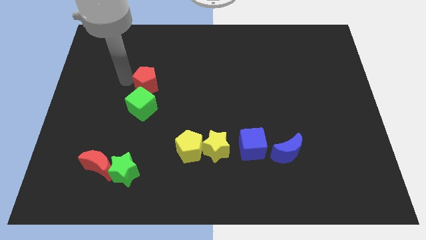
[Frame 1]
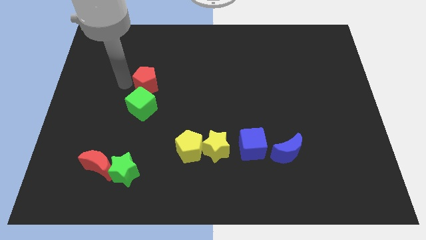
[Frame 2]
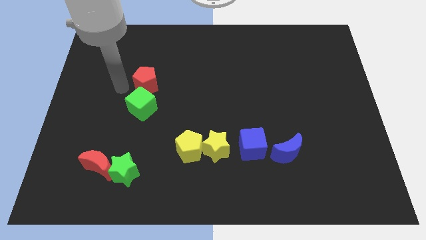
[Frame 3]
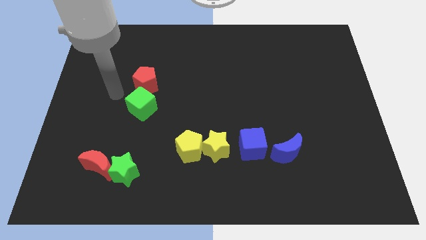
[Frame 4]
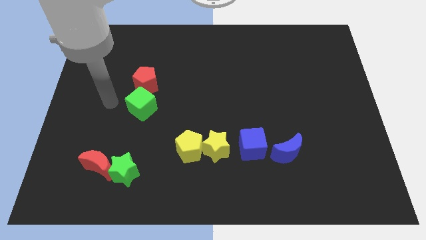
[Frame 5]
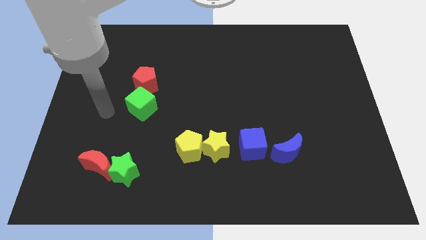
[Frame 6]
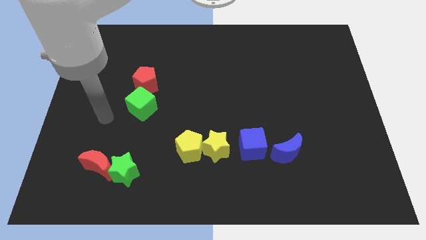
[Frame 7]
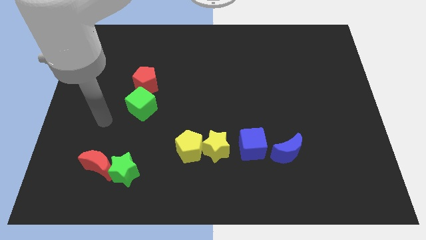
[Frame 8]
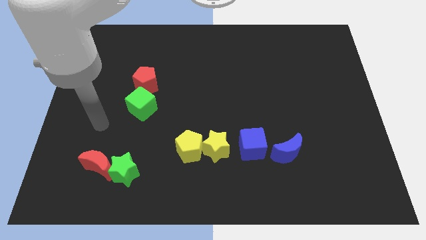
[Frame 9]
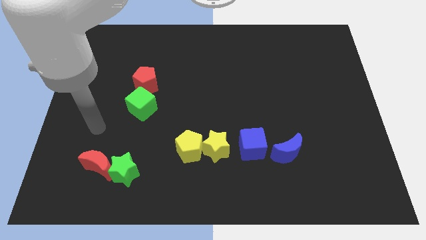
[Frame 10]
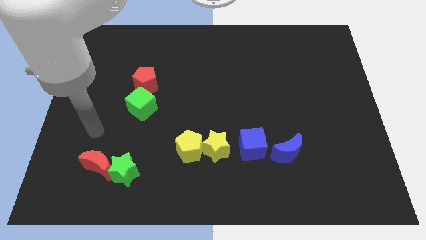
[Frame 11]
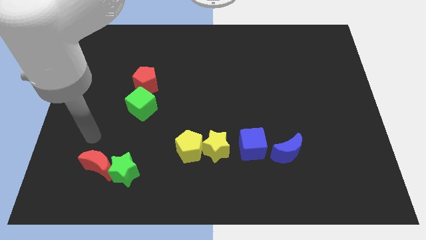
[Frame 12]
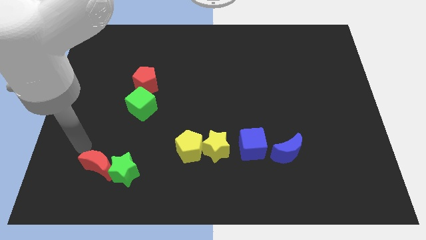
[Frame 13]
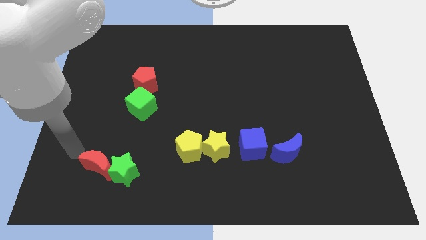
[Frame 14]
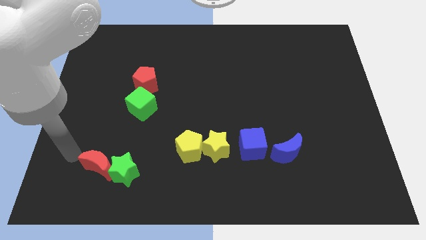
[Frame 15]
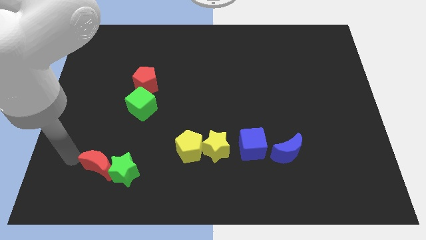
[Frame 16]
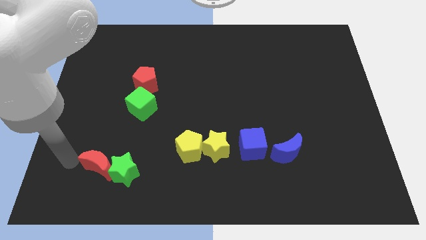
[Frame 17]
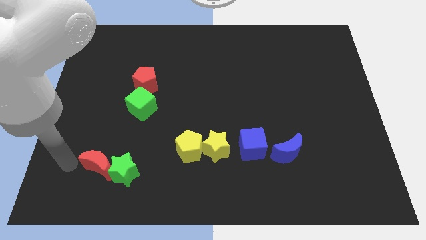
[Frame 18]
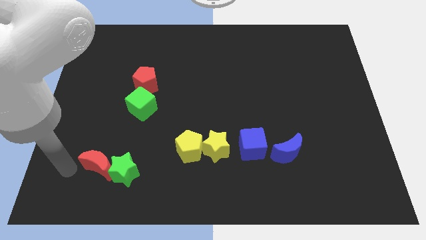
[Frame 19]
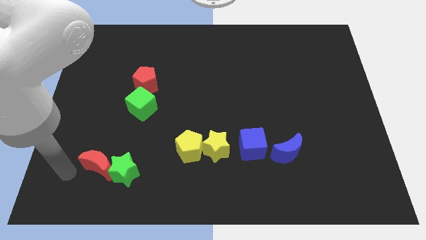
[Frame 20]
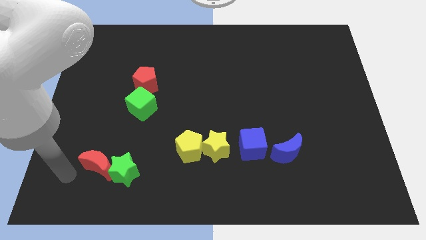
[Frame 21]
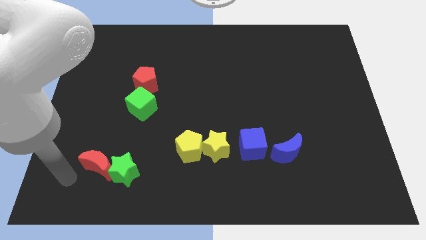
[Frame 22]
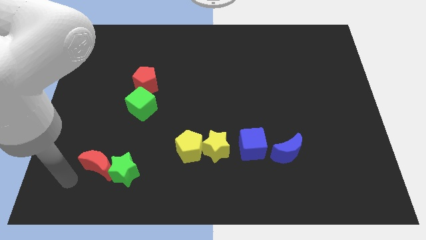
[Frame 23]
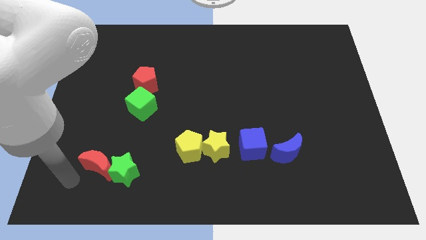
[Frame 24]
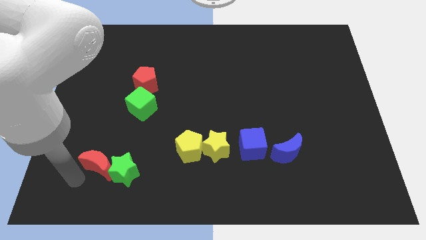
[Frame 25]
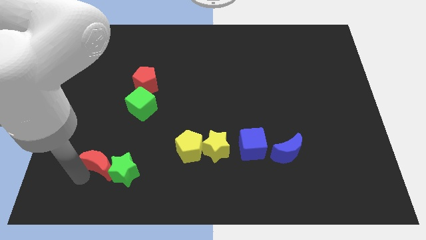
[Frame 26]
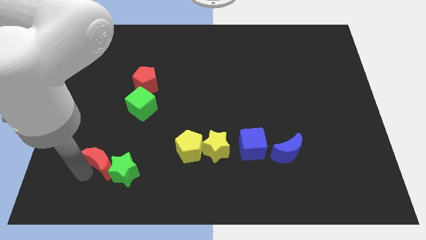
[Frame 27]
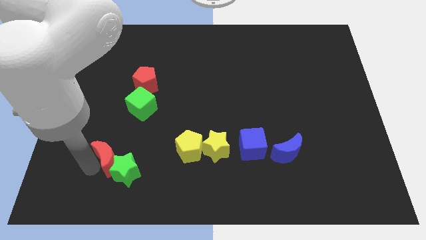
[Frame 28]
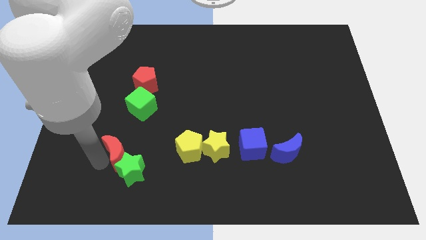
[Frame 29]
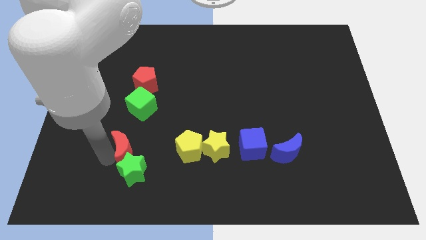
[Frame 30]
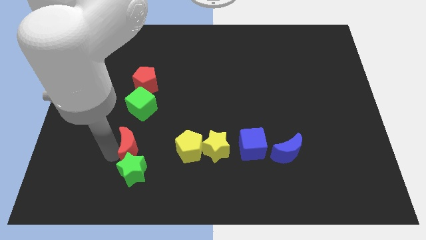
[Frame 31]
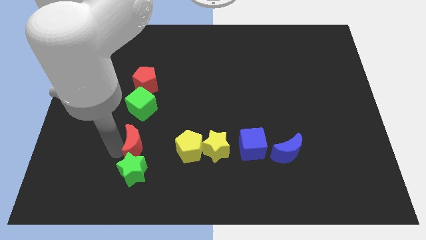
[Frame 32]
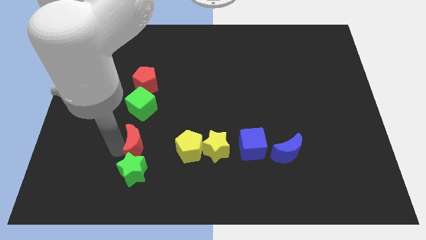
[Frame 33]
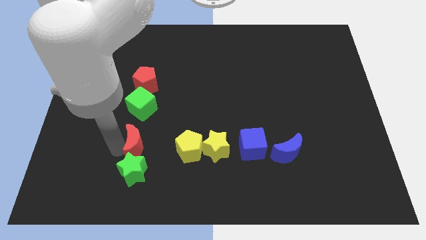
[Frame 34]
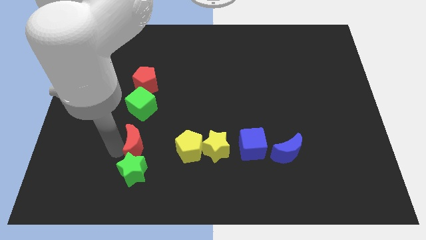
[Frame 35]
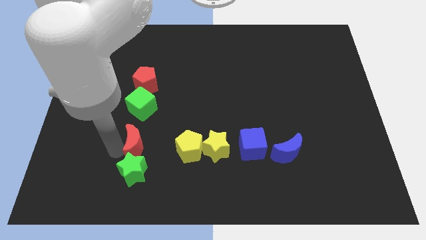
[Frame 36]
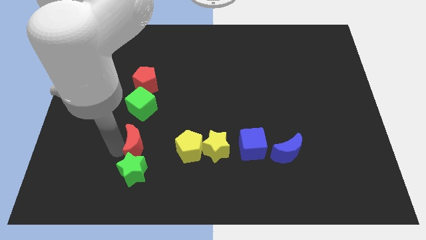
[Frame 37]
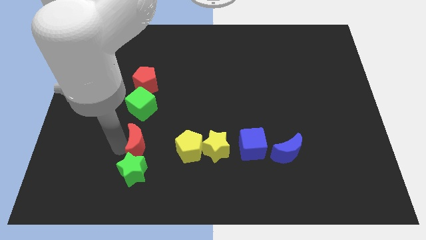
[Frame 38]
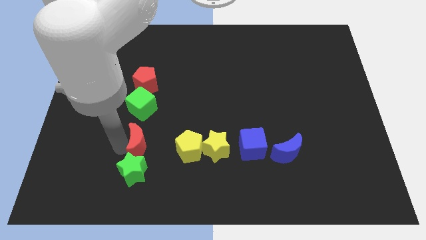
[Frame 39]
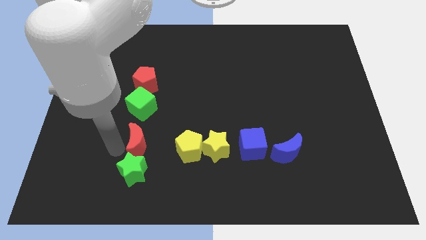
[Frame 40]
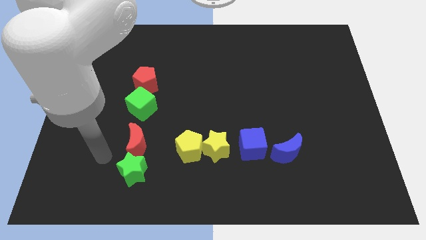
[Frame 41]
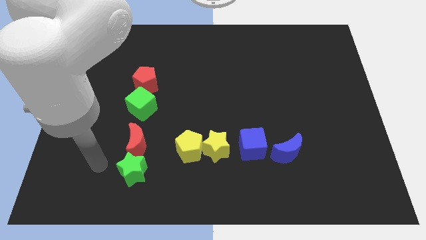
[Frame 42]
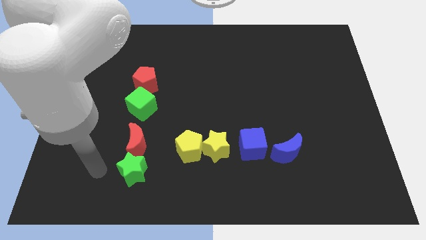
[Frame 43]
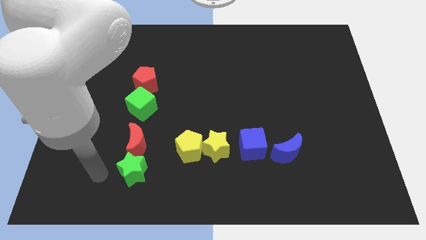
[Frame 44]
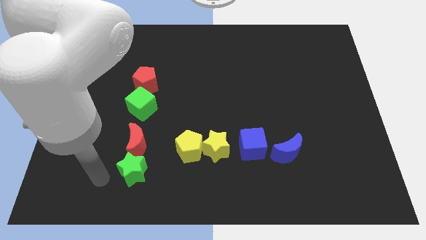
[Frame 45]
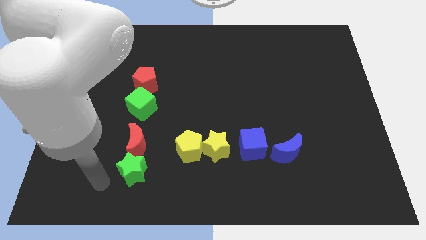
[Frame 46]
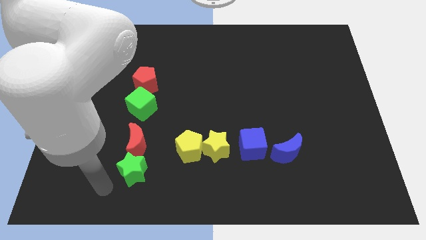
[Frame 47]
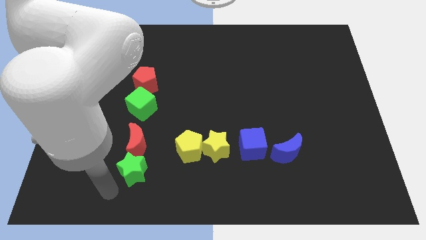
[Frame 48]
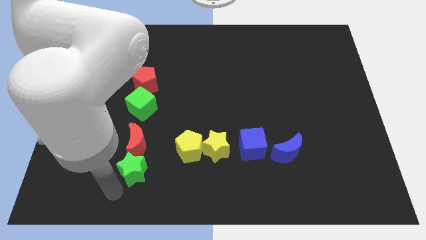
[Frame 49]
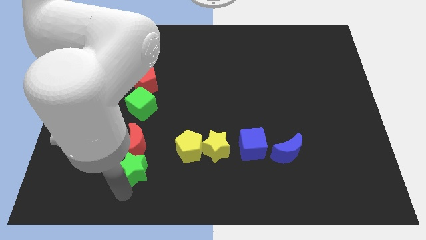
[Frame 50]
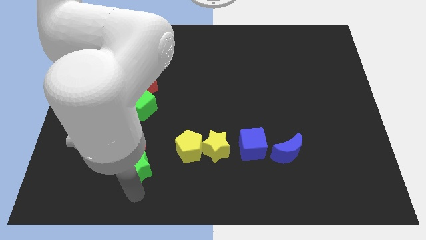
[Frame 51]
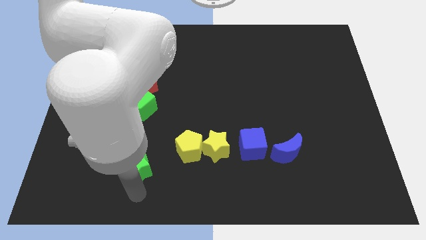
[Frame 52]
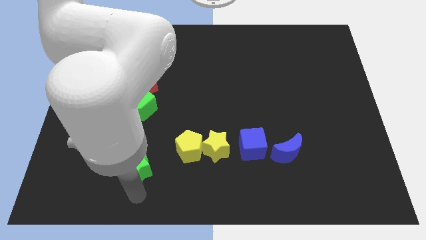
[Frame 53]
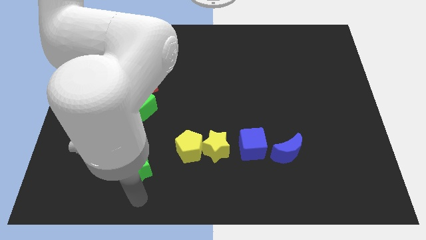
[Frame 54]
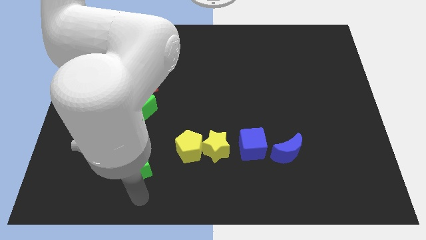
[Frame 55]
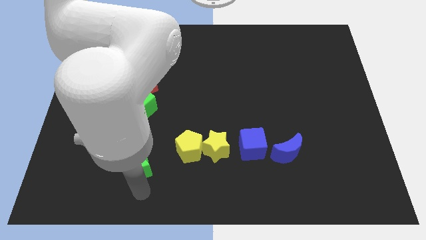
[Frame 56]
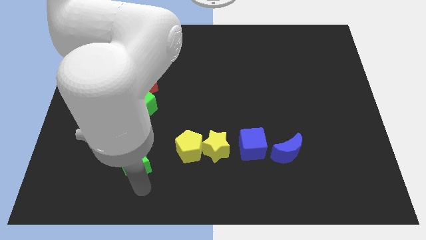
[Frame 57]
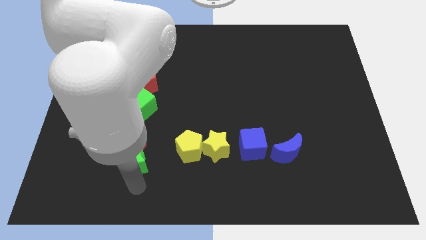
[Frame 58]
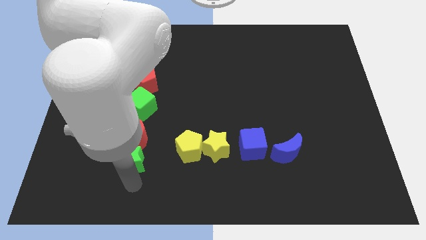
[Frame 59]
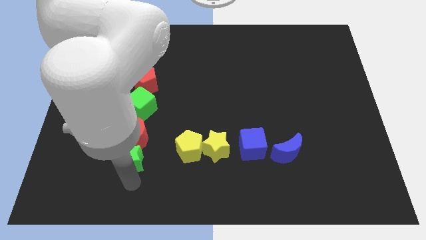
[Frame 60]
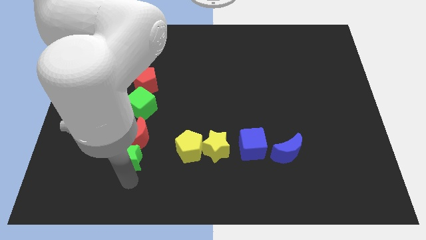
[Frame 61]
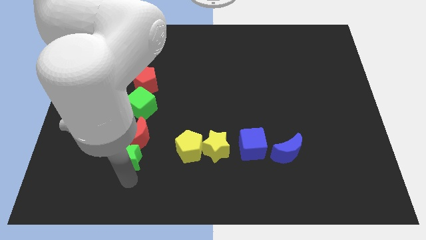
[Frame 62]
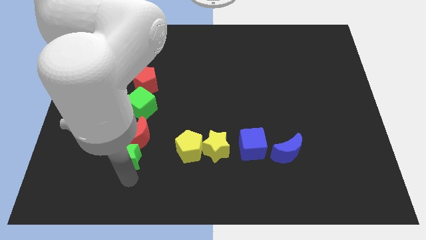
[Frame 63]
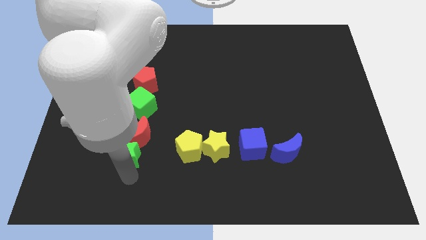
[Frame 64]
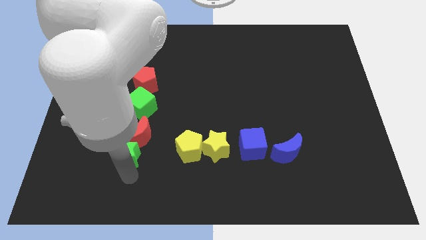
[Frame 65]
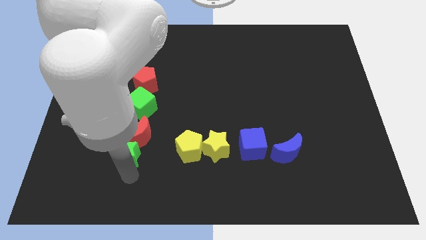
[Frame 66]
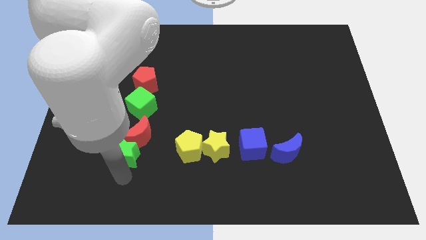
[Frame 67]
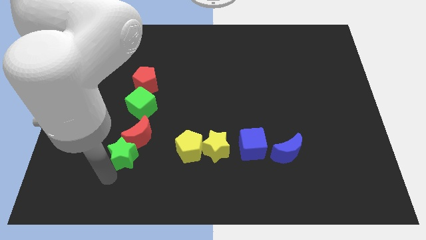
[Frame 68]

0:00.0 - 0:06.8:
move the red crescent and green star towards the bottom side of the green cube

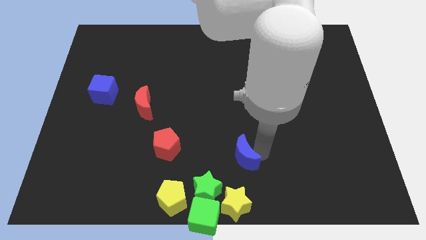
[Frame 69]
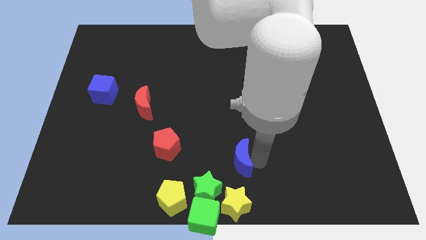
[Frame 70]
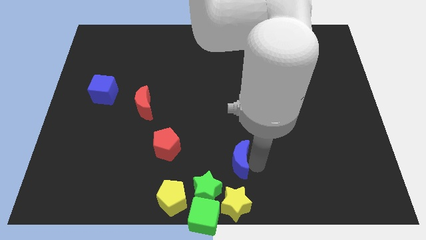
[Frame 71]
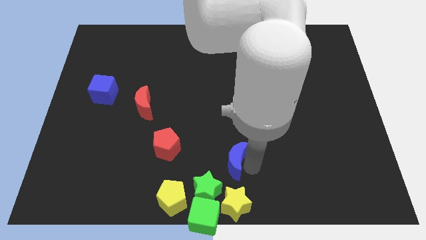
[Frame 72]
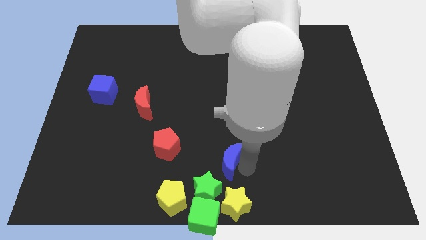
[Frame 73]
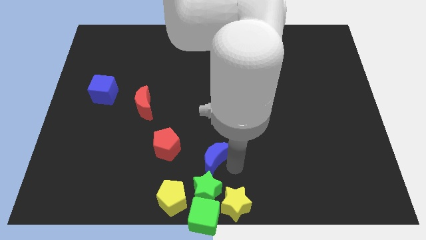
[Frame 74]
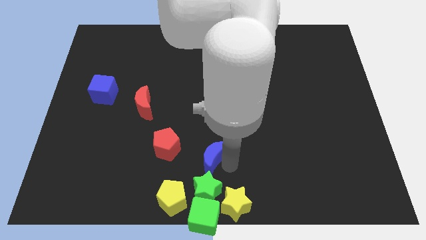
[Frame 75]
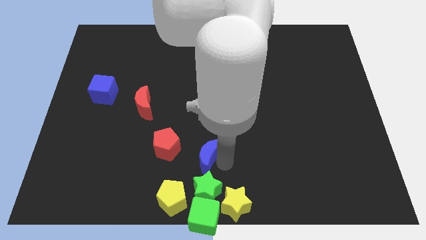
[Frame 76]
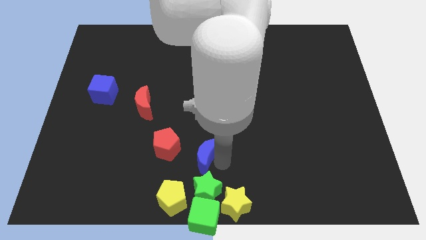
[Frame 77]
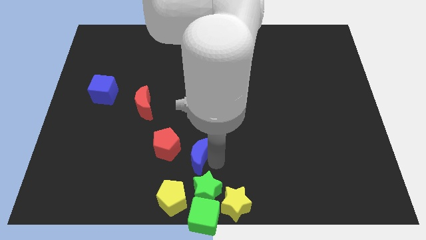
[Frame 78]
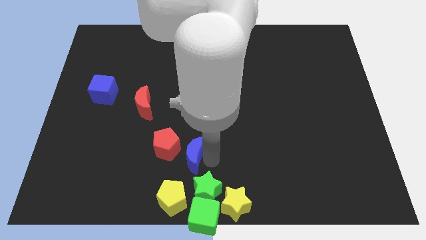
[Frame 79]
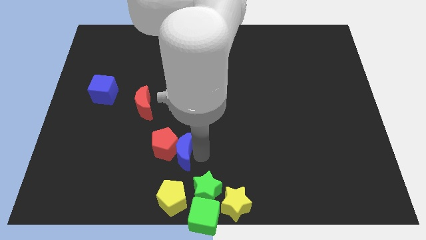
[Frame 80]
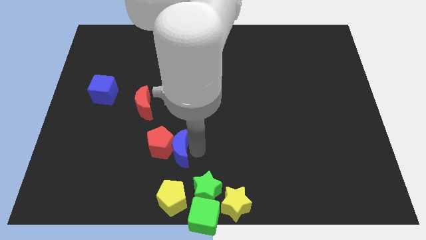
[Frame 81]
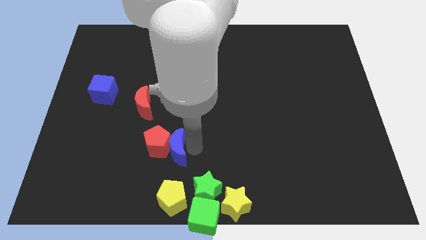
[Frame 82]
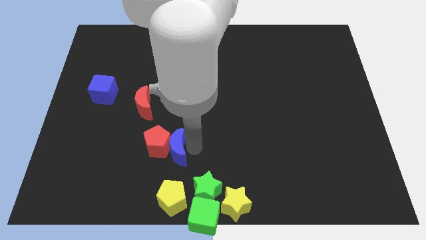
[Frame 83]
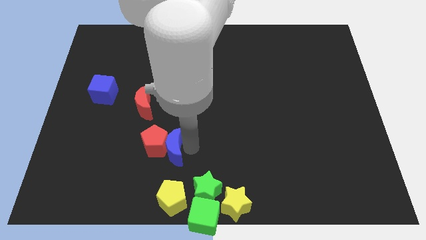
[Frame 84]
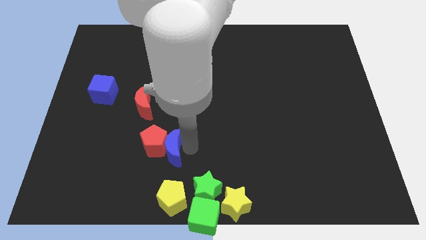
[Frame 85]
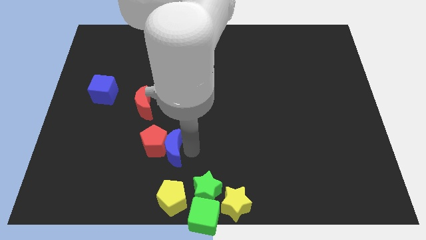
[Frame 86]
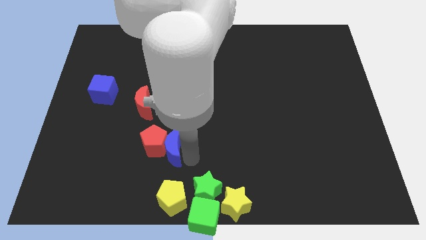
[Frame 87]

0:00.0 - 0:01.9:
slide the blue crescent into the red pentagon
